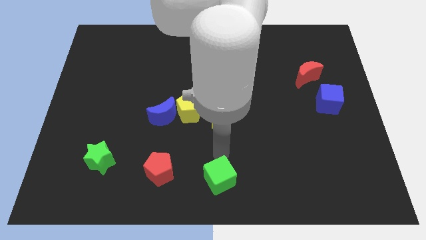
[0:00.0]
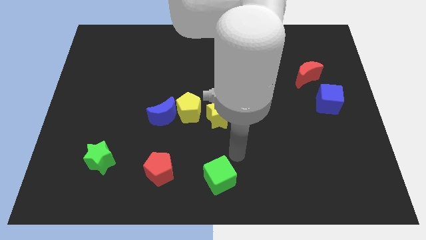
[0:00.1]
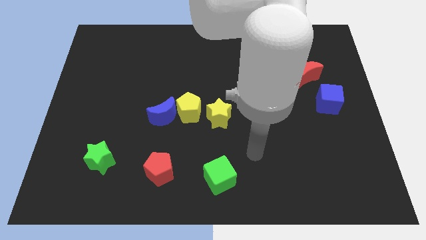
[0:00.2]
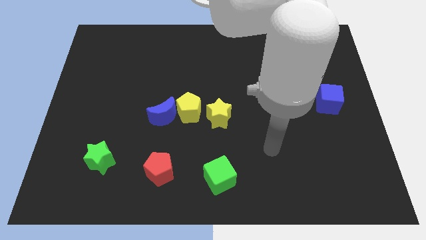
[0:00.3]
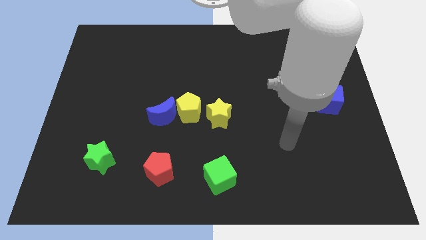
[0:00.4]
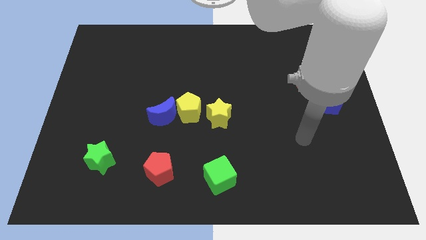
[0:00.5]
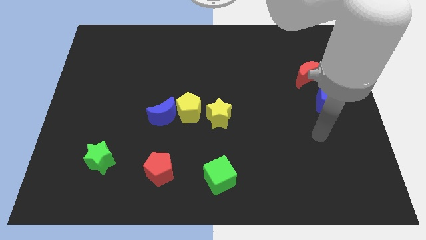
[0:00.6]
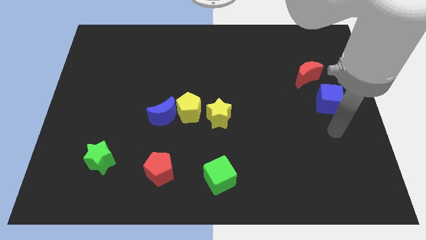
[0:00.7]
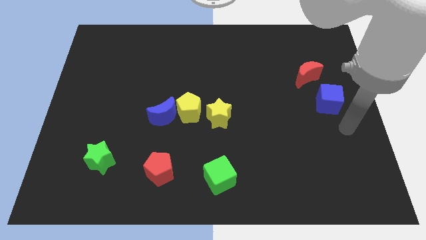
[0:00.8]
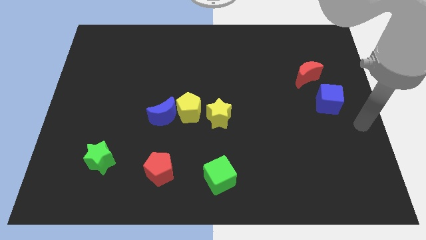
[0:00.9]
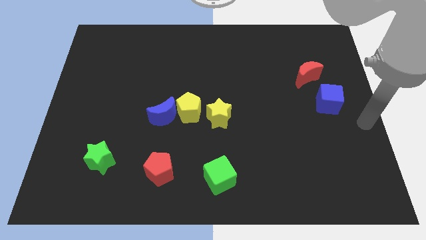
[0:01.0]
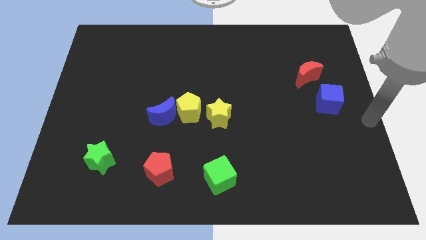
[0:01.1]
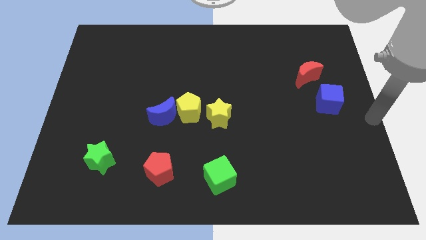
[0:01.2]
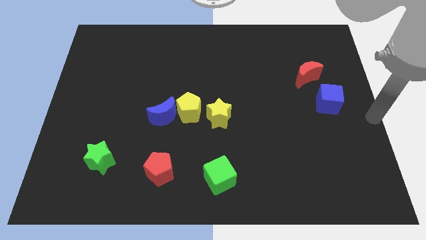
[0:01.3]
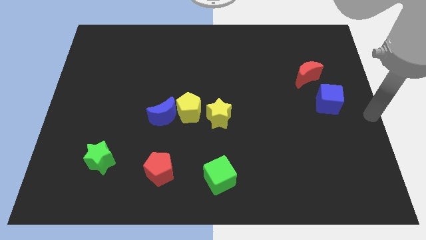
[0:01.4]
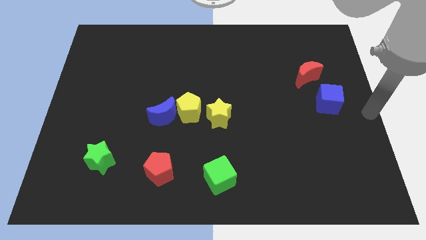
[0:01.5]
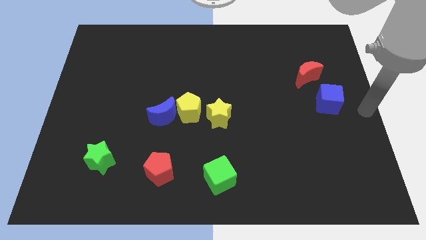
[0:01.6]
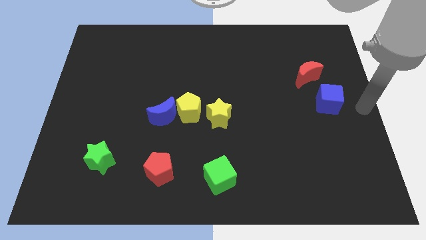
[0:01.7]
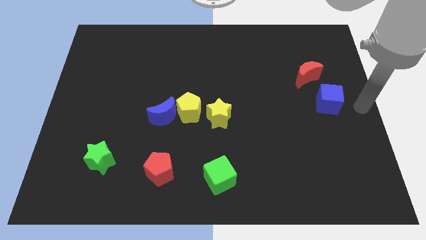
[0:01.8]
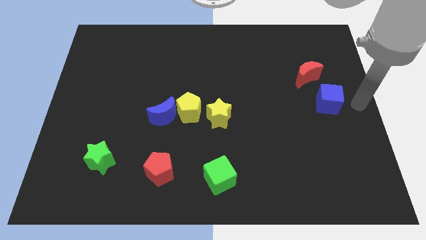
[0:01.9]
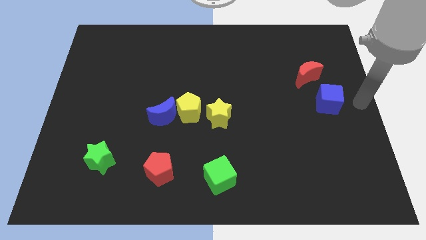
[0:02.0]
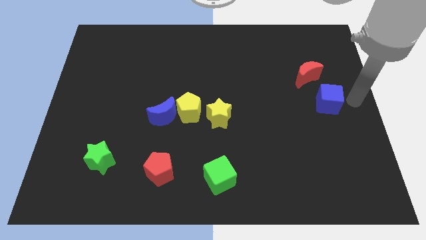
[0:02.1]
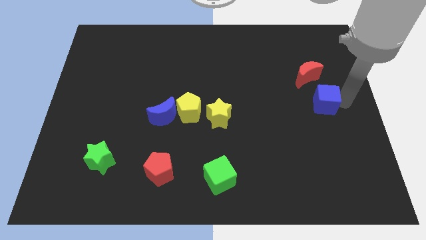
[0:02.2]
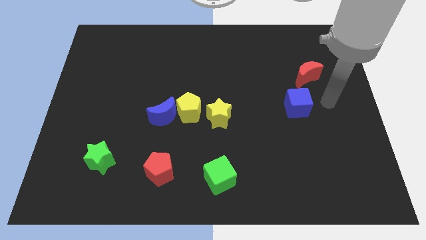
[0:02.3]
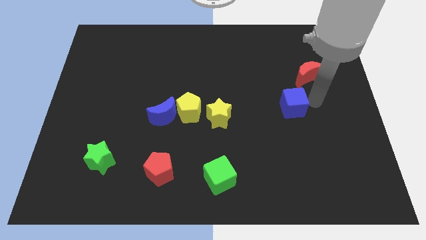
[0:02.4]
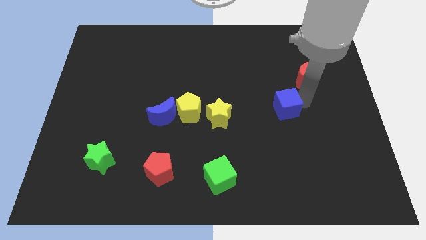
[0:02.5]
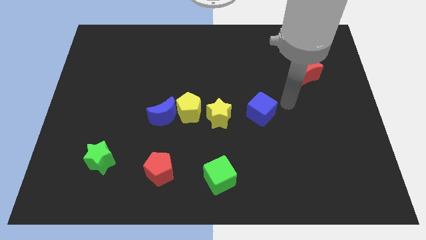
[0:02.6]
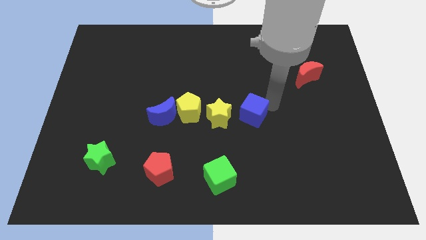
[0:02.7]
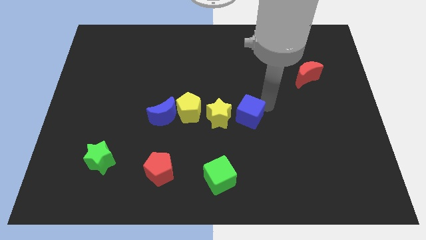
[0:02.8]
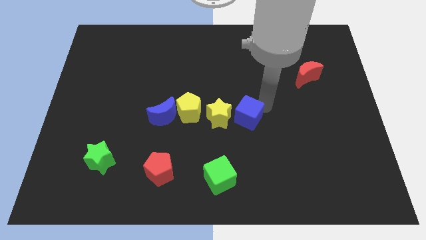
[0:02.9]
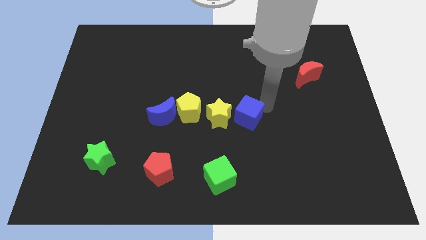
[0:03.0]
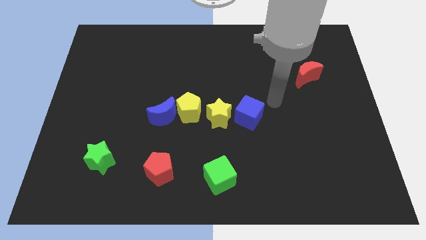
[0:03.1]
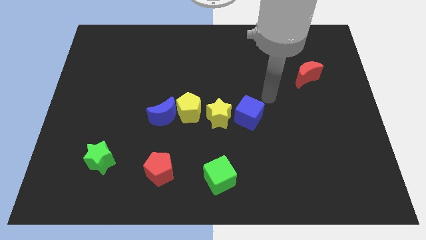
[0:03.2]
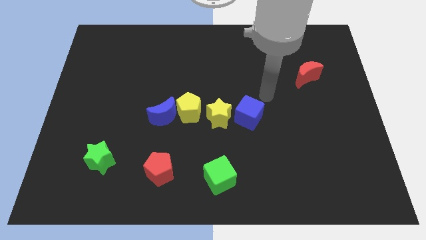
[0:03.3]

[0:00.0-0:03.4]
place the blue cube diagonally on the top right to the green cube

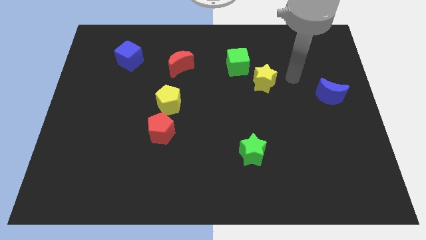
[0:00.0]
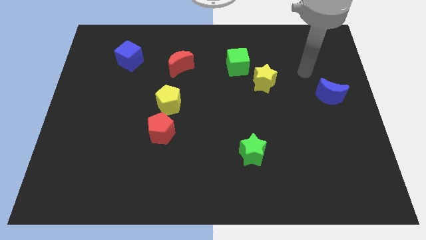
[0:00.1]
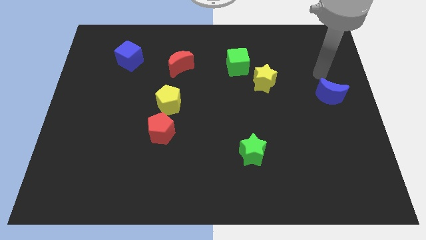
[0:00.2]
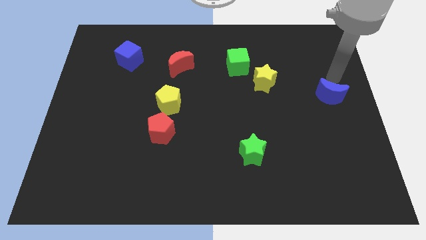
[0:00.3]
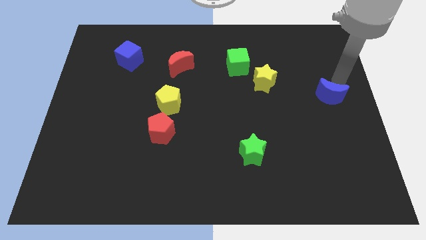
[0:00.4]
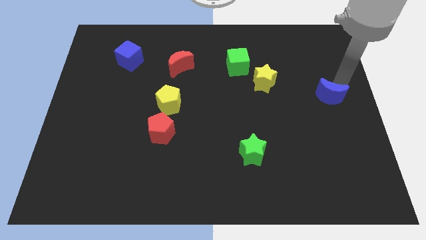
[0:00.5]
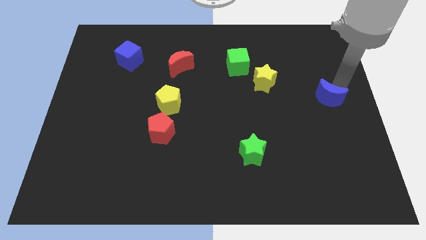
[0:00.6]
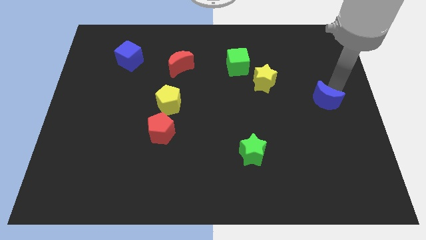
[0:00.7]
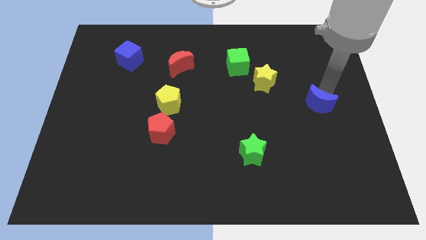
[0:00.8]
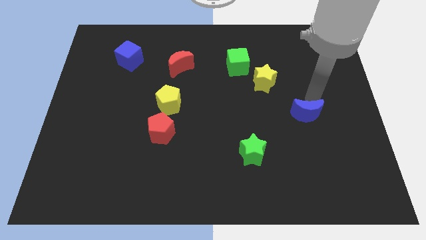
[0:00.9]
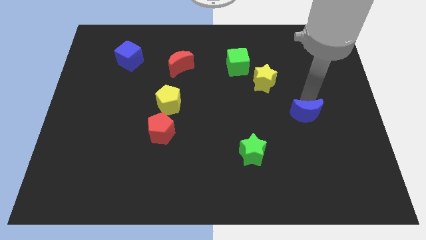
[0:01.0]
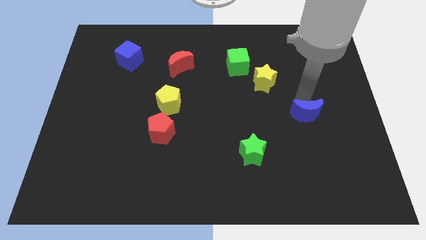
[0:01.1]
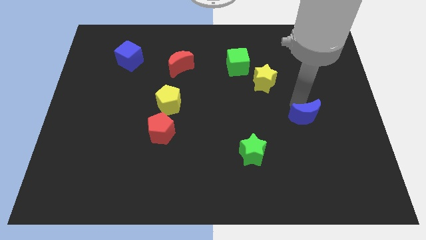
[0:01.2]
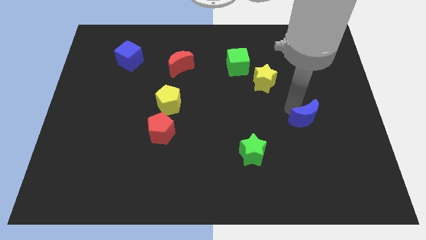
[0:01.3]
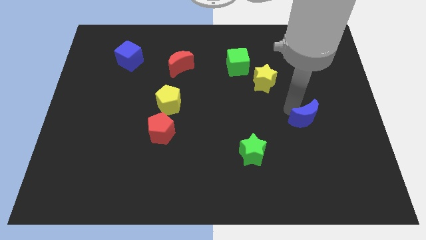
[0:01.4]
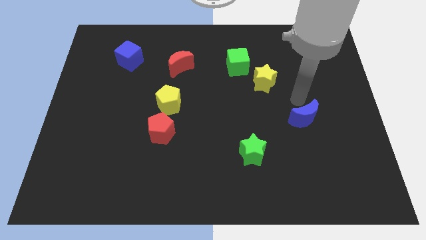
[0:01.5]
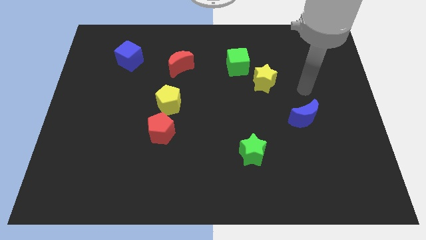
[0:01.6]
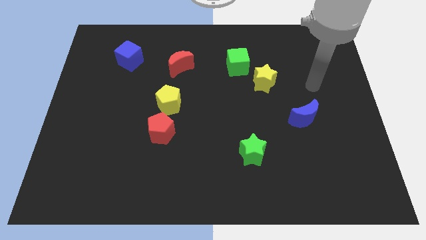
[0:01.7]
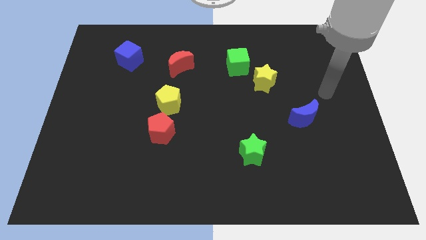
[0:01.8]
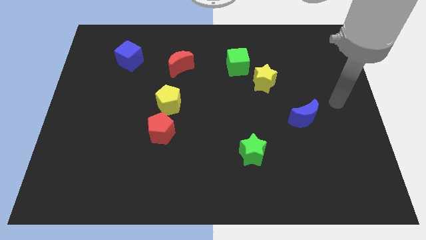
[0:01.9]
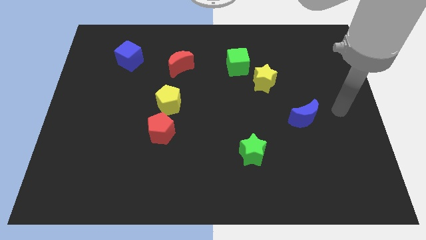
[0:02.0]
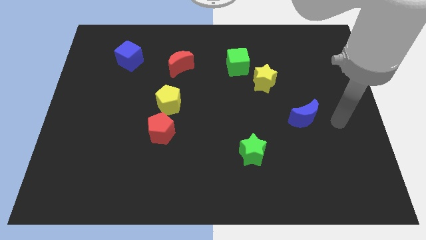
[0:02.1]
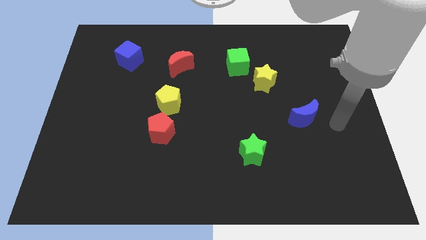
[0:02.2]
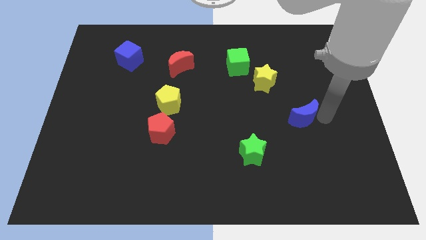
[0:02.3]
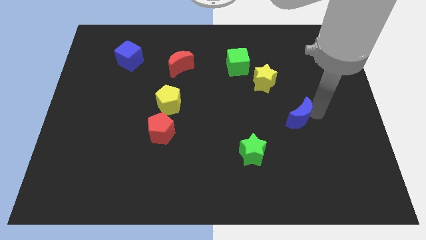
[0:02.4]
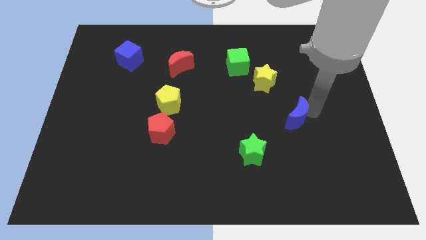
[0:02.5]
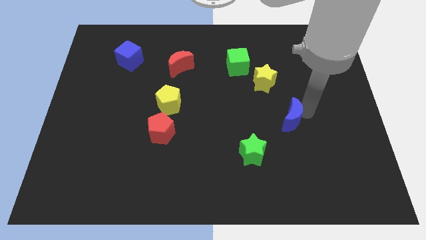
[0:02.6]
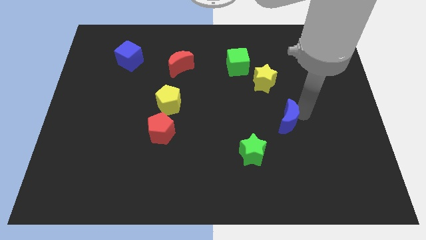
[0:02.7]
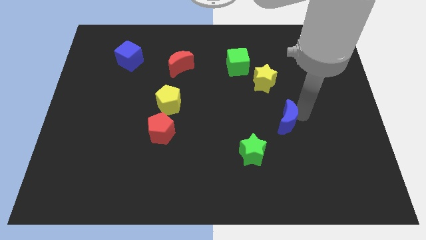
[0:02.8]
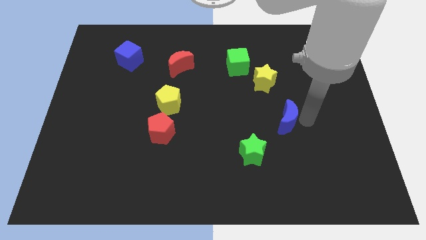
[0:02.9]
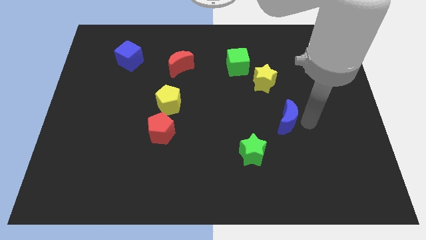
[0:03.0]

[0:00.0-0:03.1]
move blue crescent towards the green star

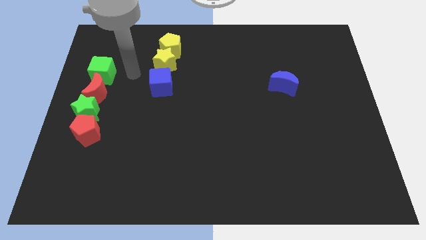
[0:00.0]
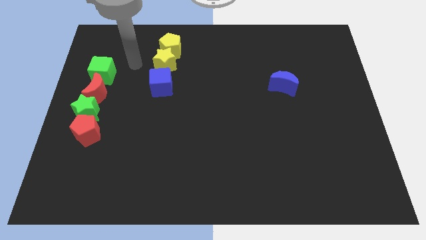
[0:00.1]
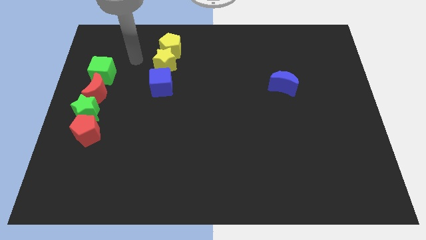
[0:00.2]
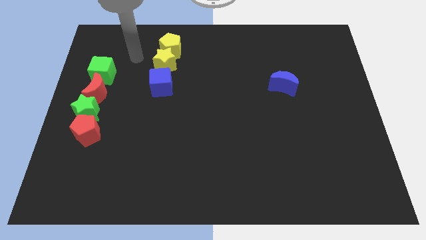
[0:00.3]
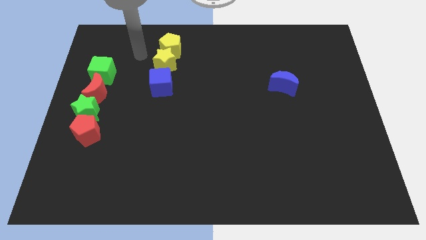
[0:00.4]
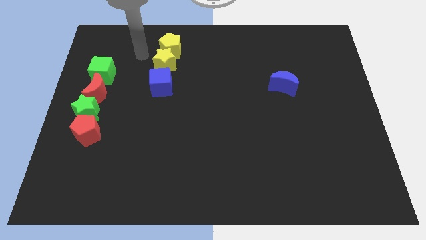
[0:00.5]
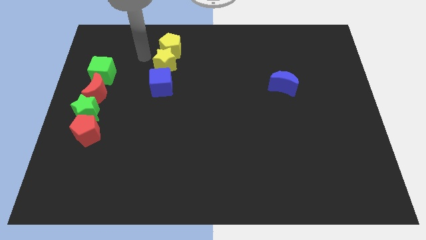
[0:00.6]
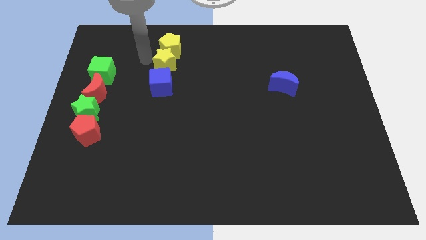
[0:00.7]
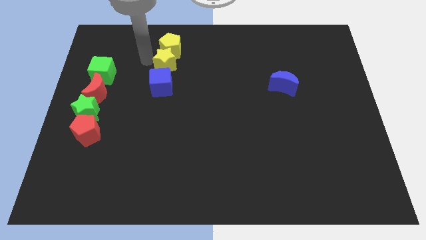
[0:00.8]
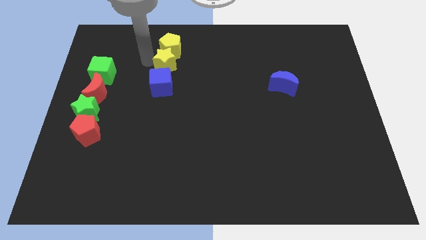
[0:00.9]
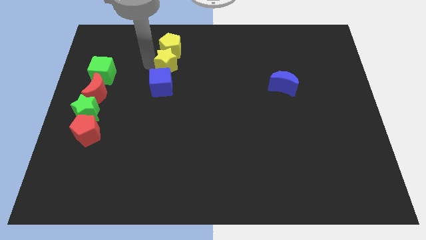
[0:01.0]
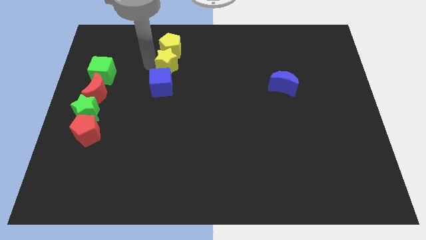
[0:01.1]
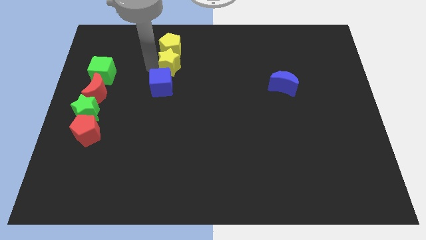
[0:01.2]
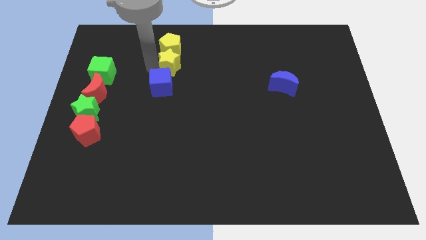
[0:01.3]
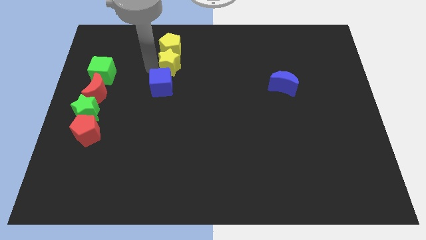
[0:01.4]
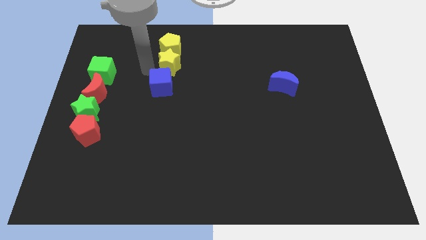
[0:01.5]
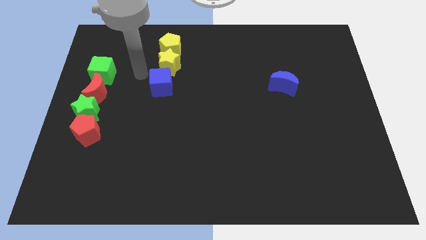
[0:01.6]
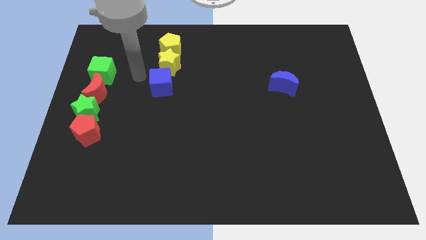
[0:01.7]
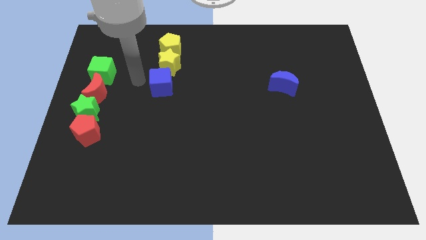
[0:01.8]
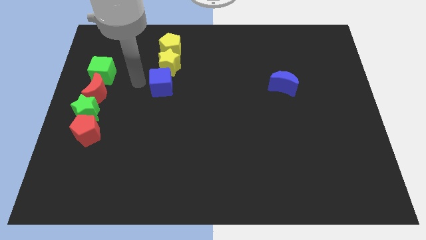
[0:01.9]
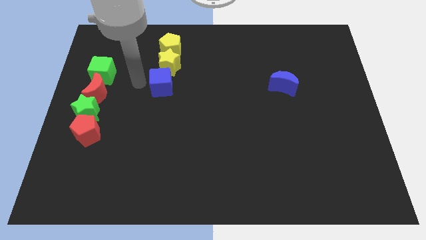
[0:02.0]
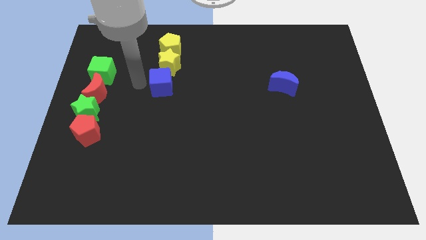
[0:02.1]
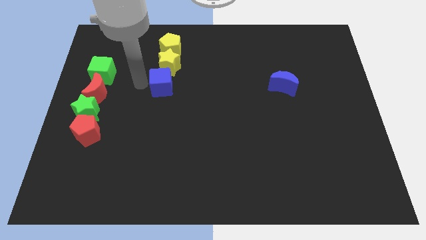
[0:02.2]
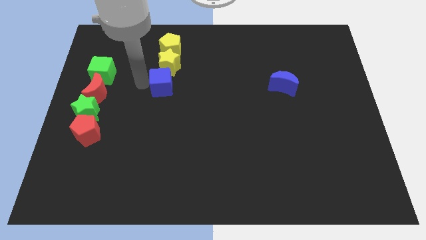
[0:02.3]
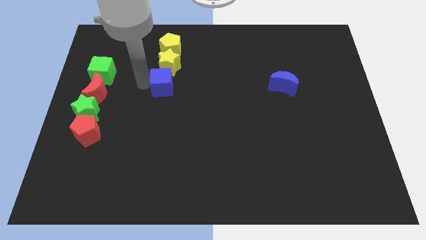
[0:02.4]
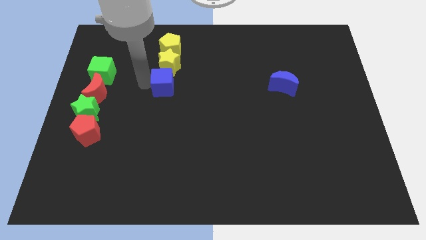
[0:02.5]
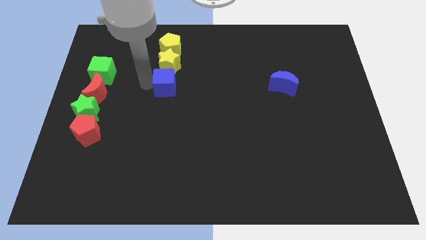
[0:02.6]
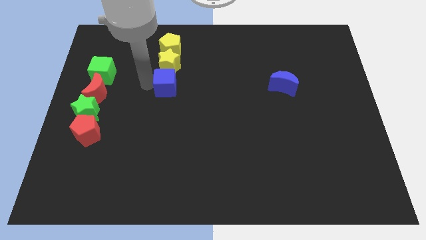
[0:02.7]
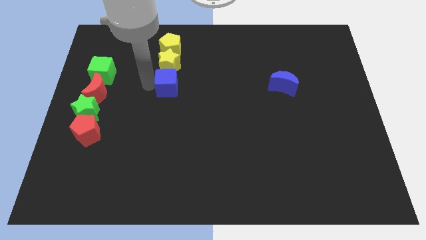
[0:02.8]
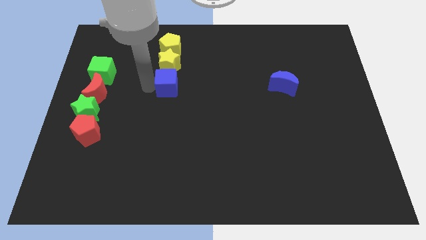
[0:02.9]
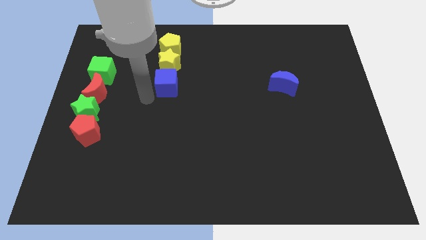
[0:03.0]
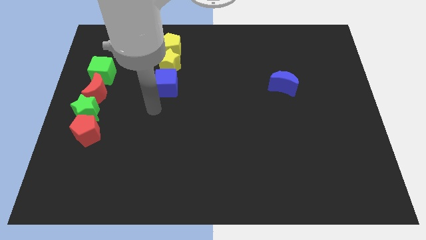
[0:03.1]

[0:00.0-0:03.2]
place three blocks in a vertical line
